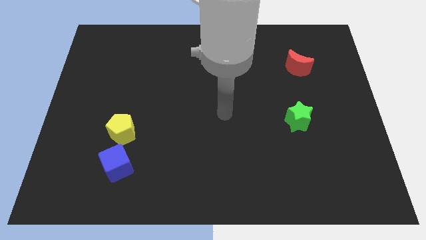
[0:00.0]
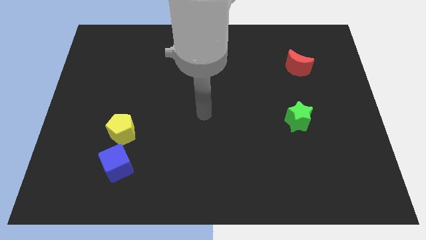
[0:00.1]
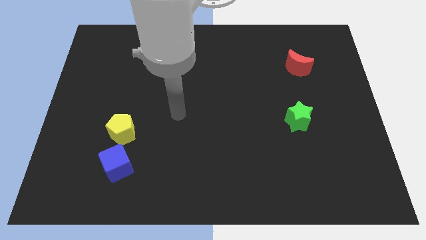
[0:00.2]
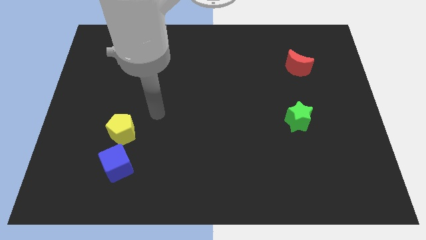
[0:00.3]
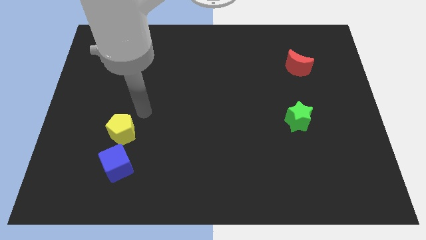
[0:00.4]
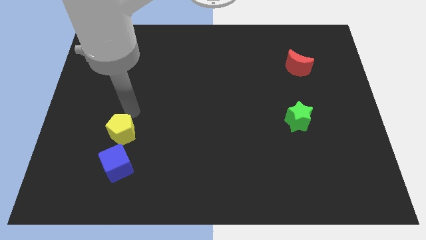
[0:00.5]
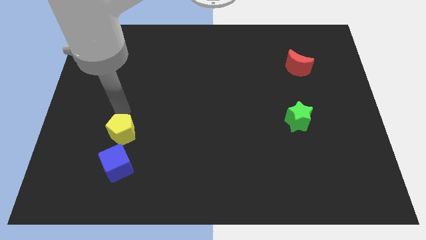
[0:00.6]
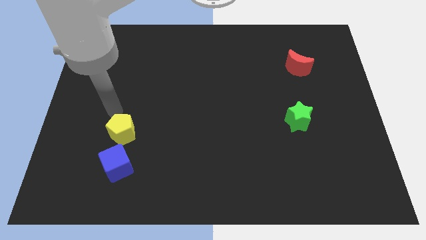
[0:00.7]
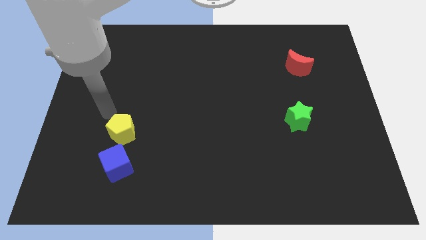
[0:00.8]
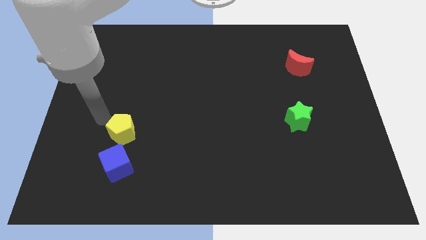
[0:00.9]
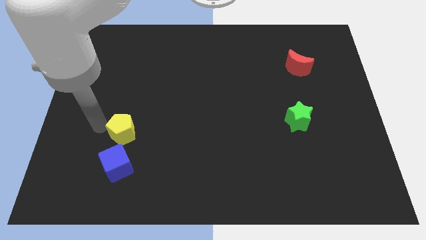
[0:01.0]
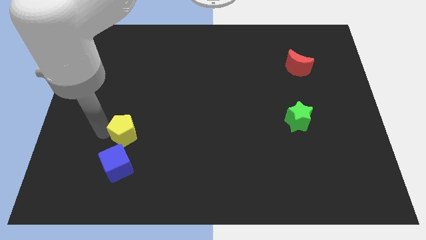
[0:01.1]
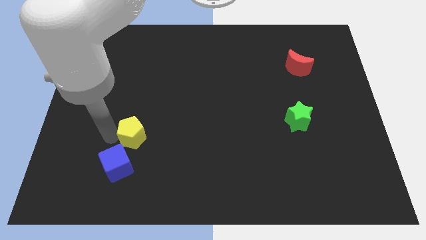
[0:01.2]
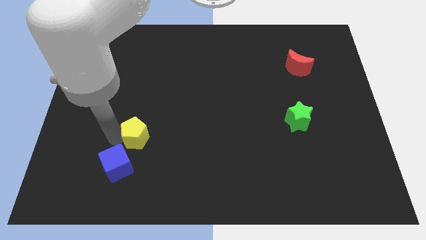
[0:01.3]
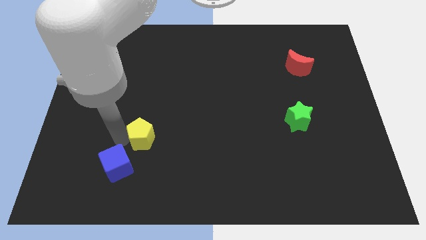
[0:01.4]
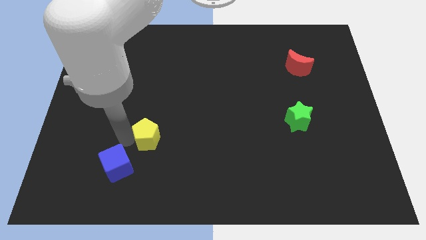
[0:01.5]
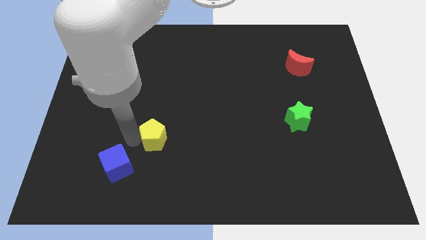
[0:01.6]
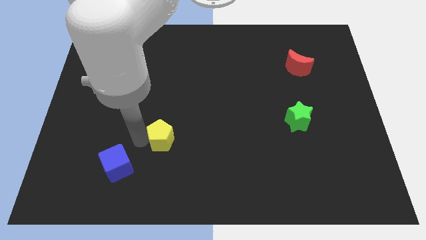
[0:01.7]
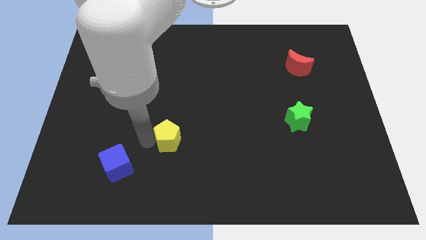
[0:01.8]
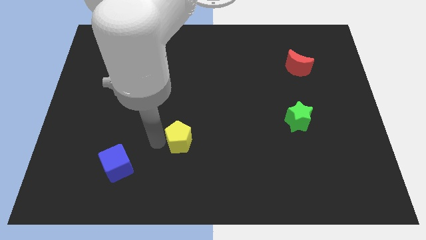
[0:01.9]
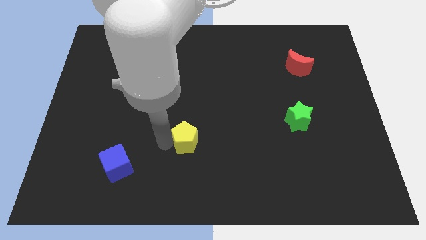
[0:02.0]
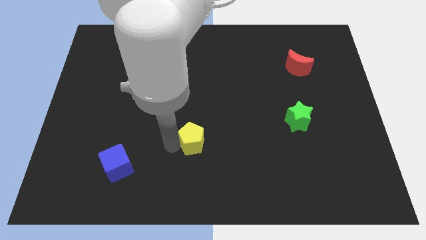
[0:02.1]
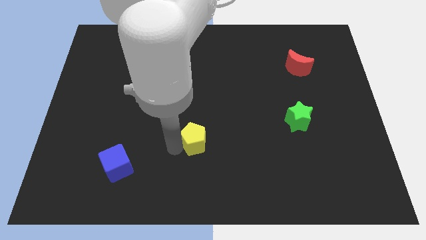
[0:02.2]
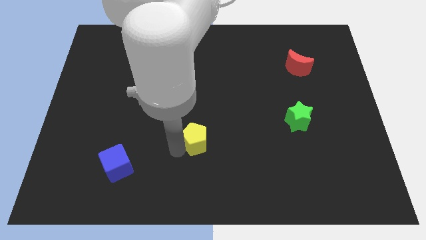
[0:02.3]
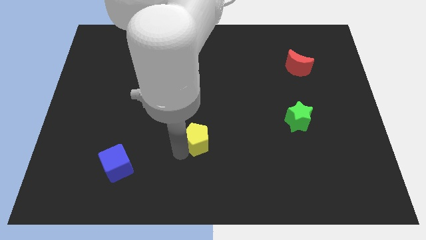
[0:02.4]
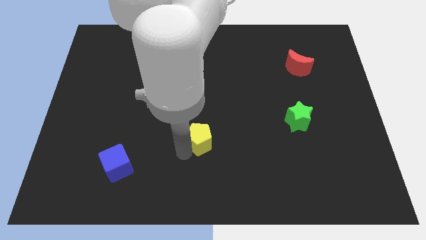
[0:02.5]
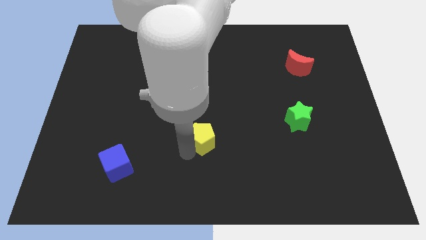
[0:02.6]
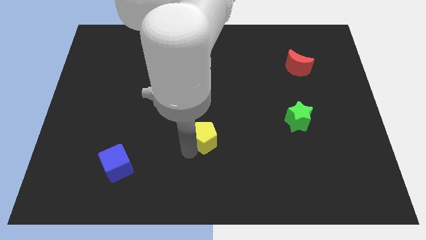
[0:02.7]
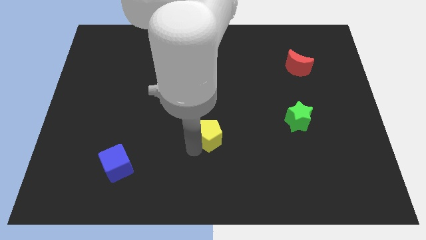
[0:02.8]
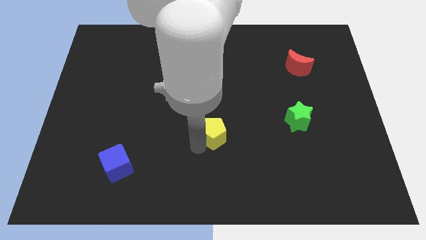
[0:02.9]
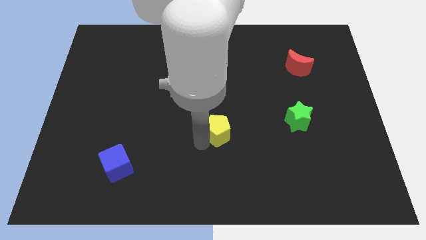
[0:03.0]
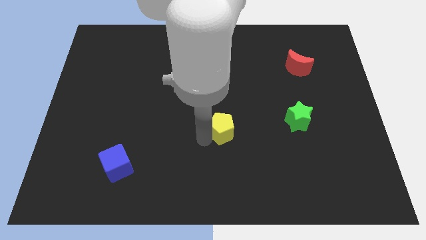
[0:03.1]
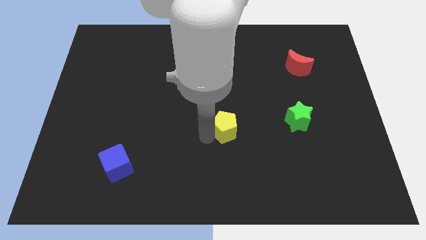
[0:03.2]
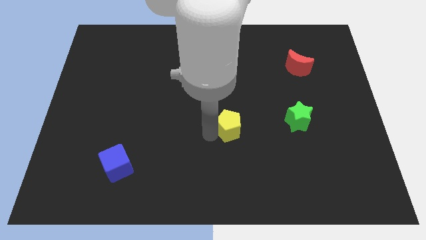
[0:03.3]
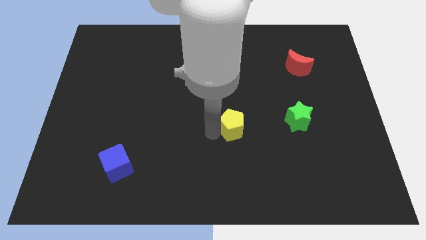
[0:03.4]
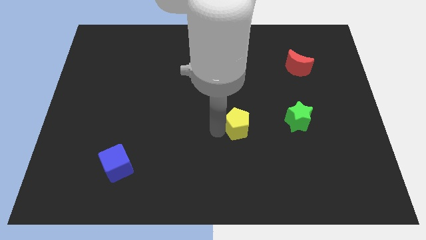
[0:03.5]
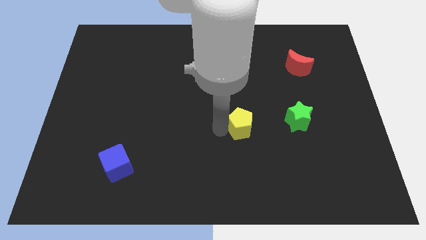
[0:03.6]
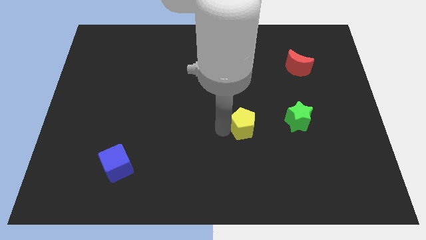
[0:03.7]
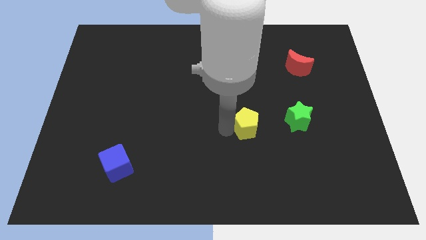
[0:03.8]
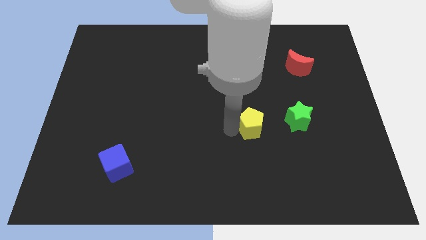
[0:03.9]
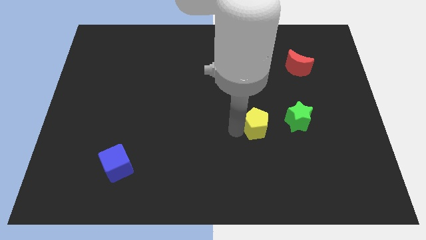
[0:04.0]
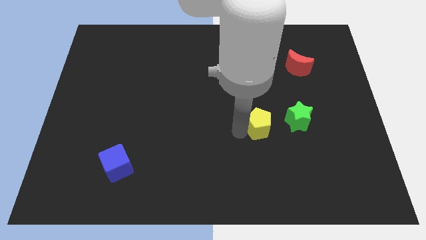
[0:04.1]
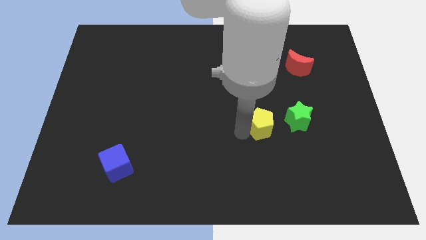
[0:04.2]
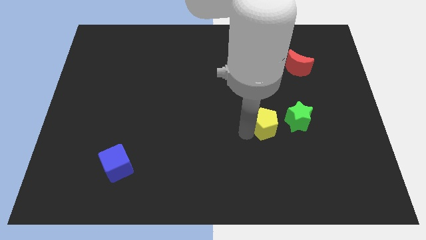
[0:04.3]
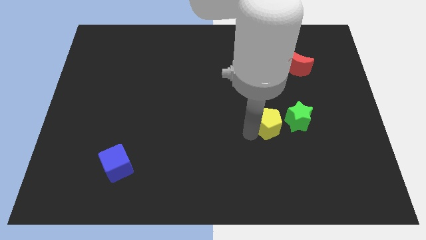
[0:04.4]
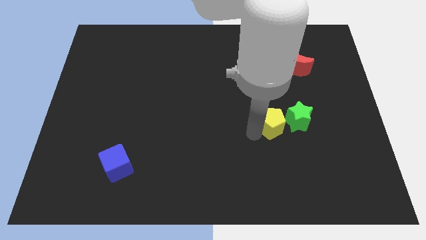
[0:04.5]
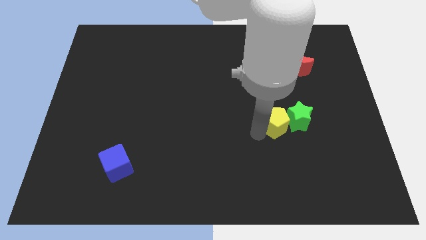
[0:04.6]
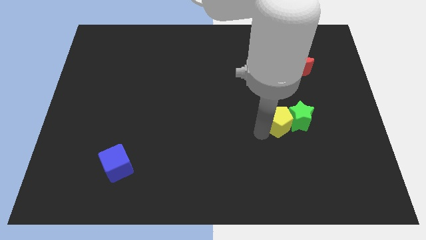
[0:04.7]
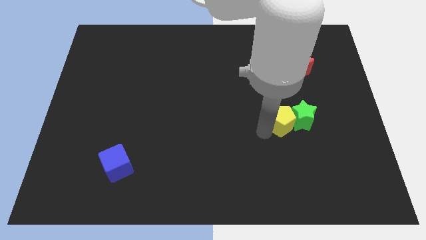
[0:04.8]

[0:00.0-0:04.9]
put the yellow block towards the green block

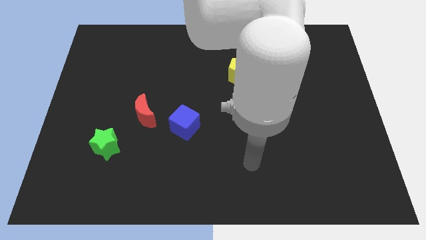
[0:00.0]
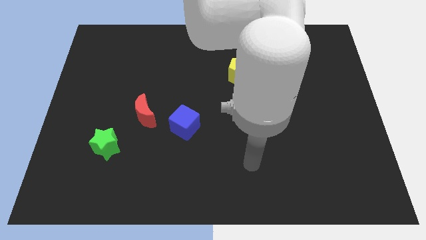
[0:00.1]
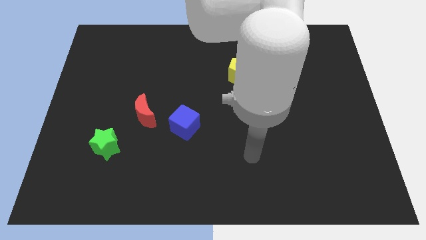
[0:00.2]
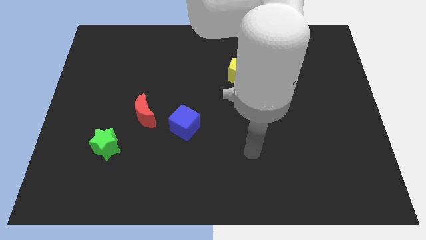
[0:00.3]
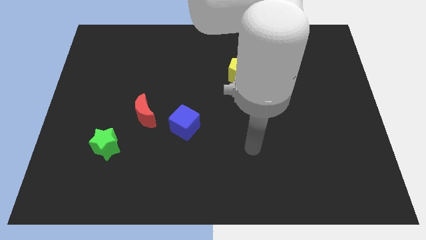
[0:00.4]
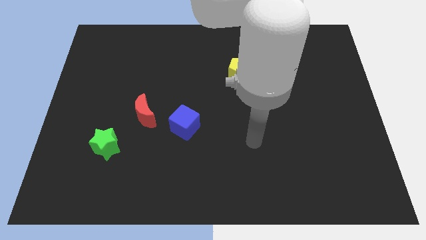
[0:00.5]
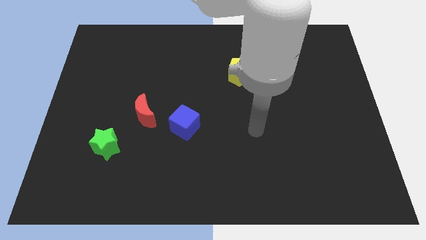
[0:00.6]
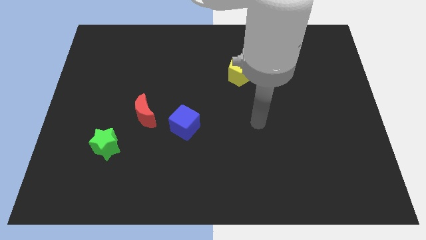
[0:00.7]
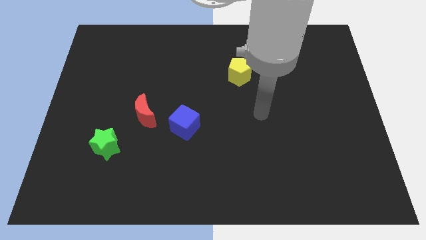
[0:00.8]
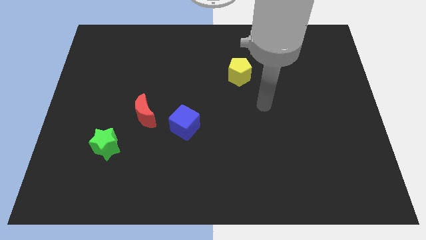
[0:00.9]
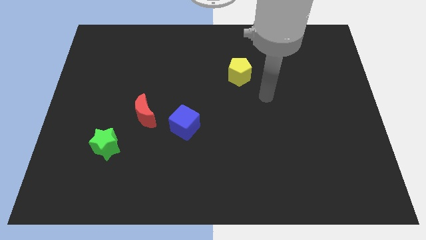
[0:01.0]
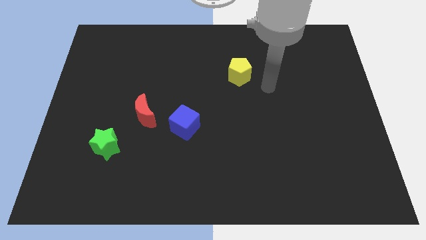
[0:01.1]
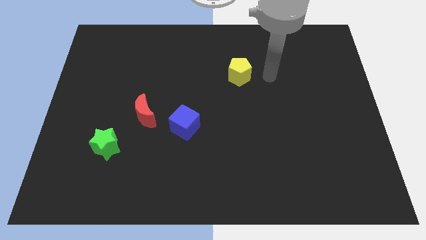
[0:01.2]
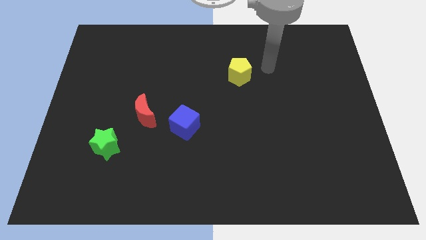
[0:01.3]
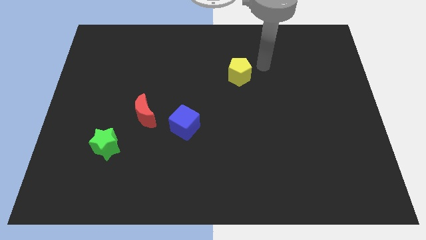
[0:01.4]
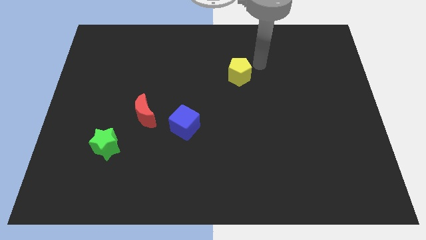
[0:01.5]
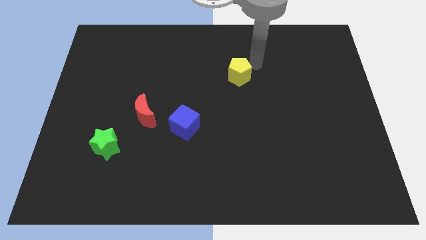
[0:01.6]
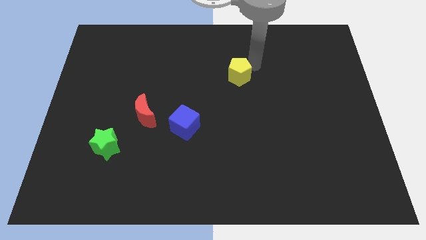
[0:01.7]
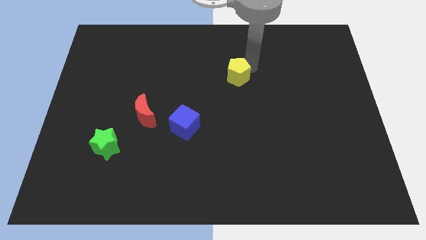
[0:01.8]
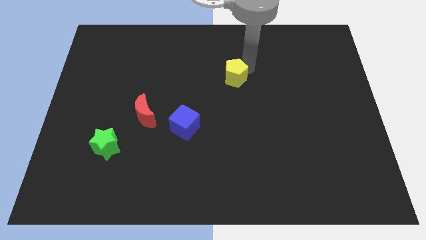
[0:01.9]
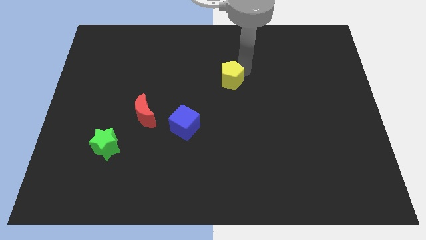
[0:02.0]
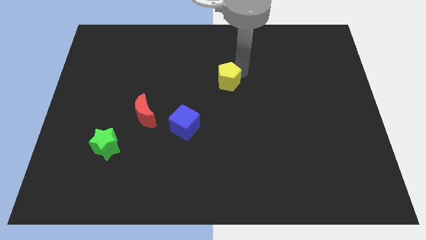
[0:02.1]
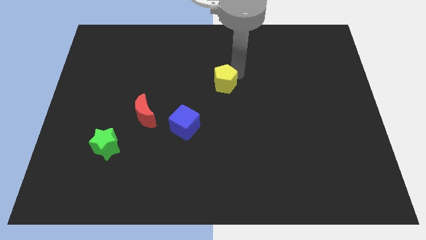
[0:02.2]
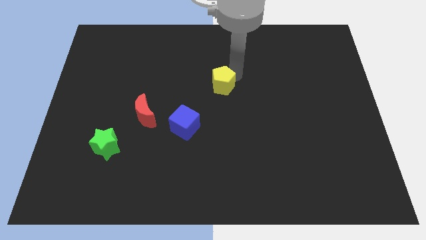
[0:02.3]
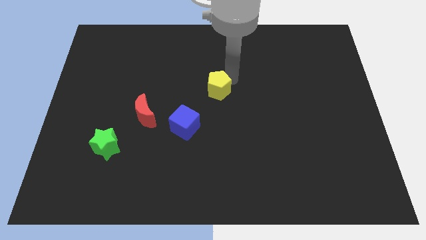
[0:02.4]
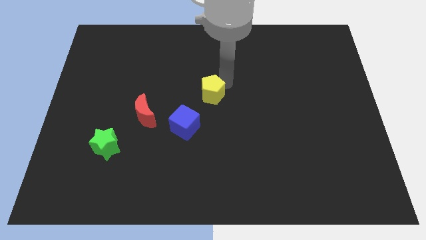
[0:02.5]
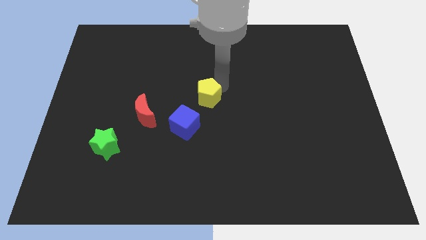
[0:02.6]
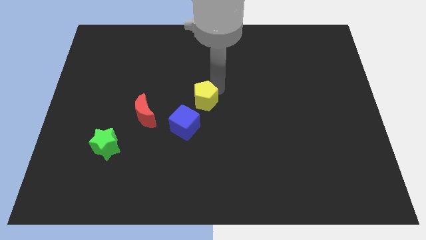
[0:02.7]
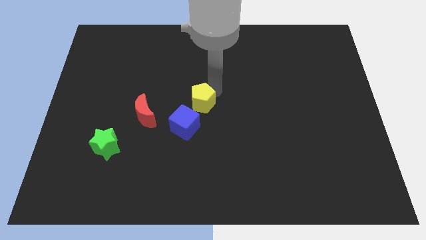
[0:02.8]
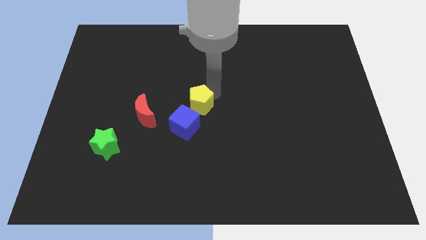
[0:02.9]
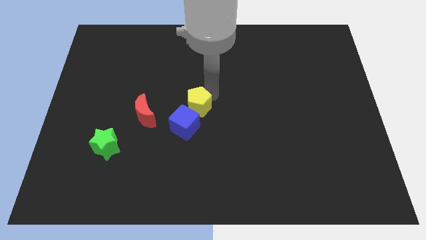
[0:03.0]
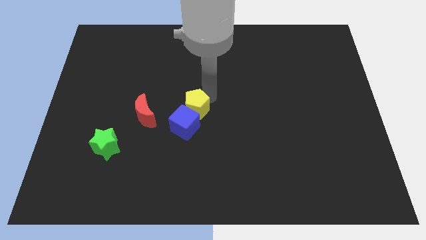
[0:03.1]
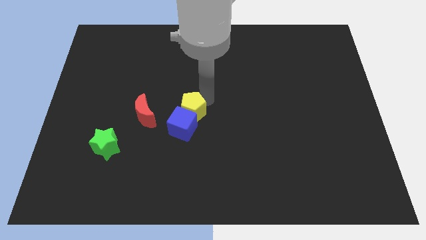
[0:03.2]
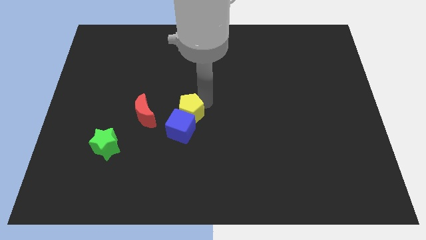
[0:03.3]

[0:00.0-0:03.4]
slide the yellow block next to the blue cube
